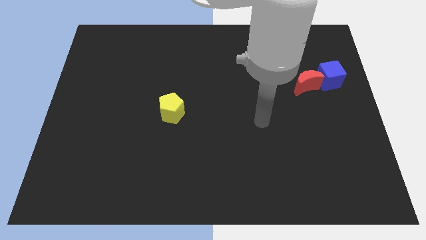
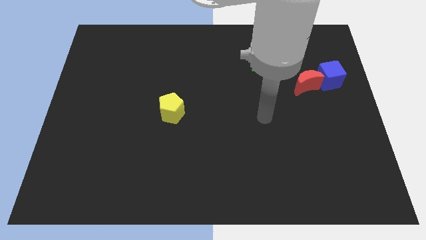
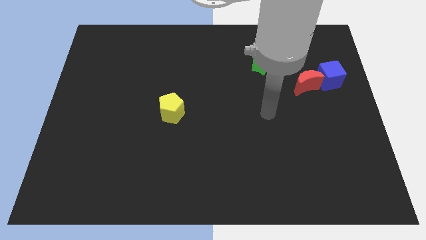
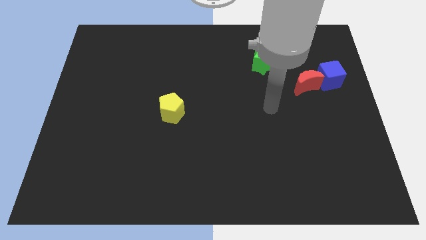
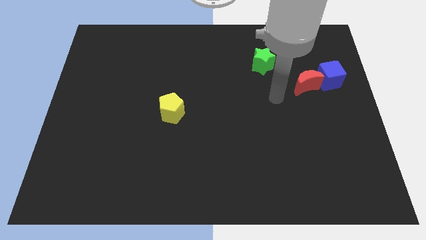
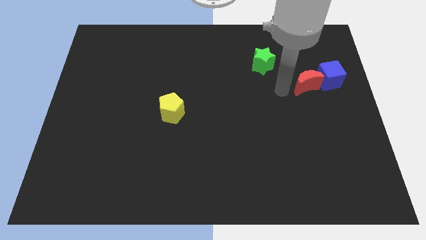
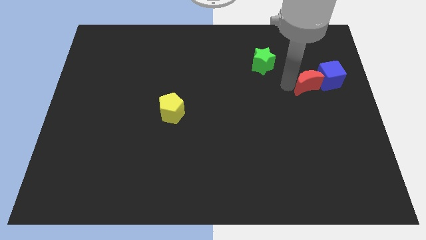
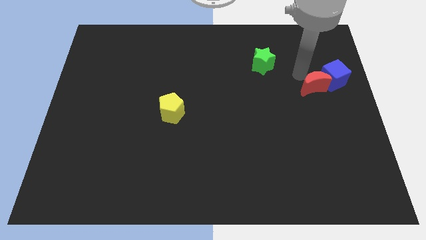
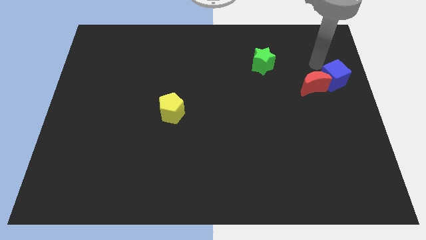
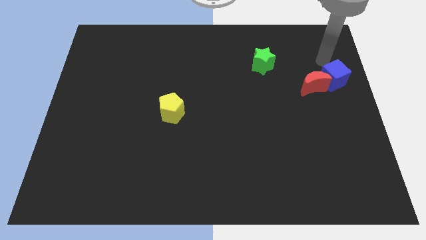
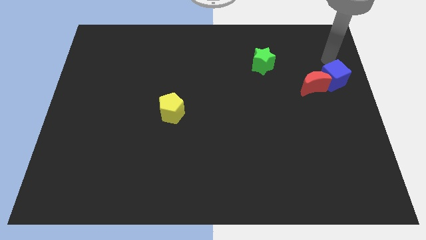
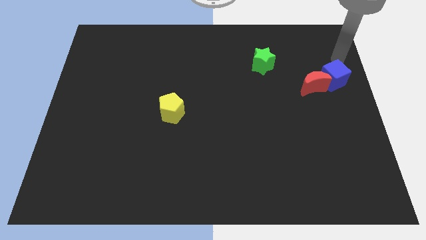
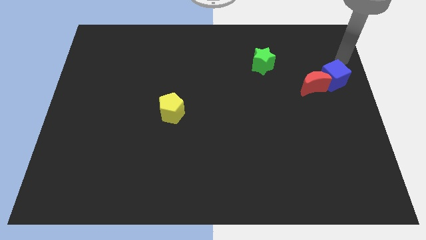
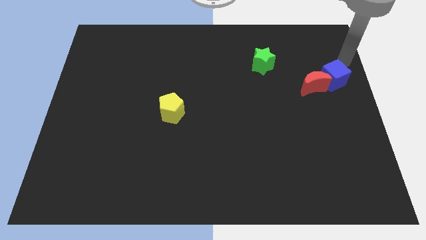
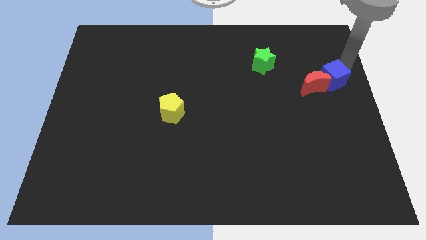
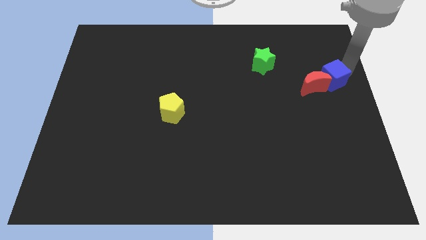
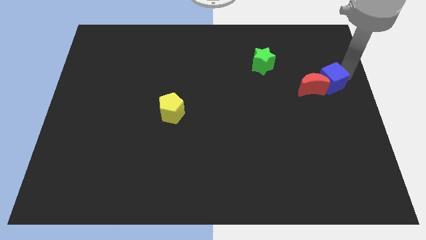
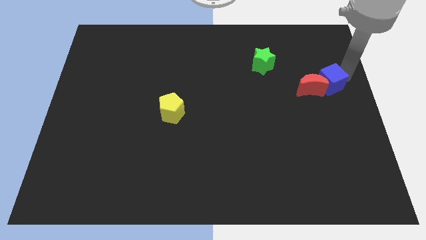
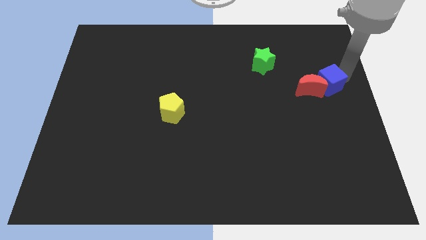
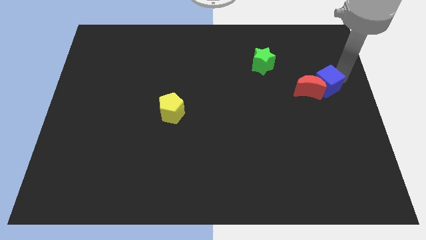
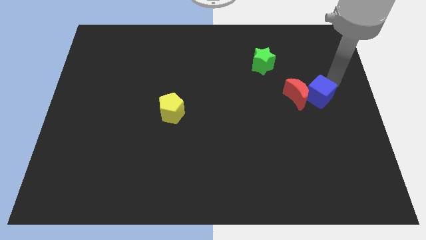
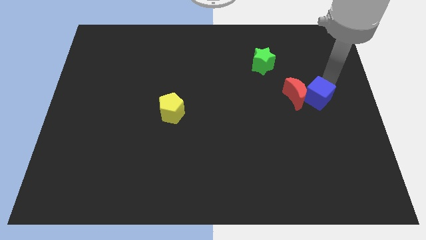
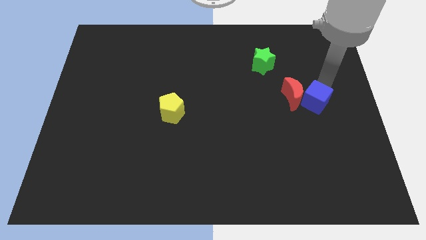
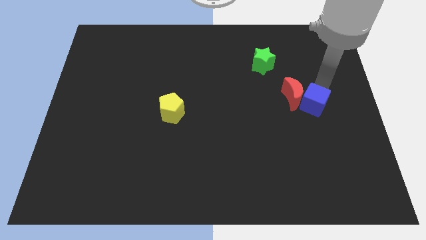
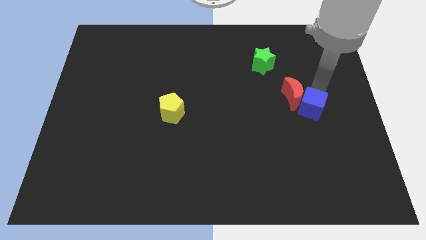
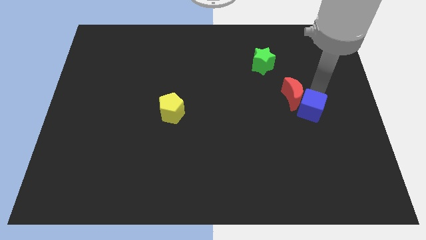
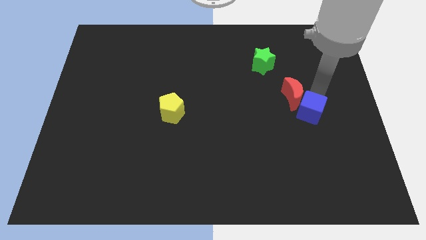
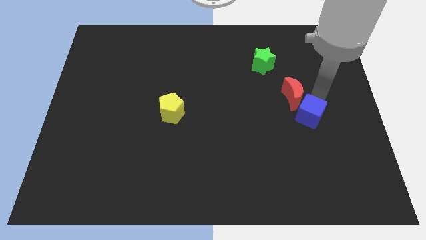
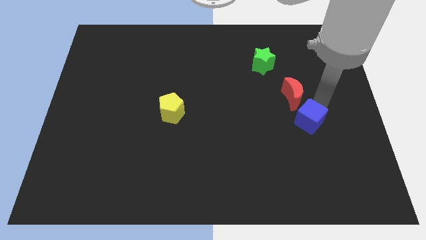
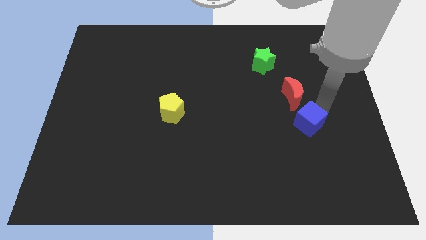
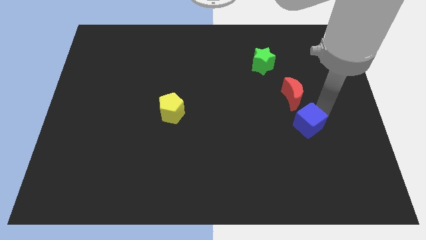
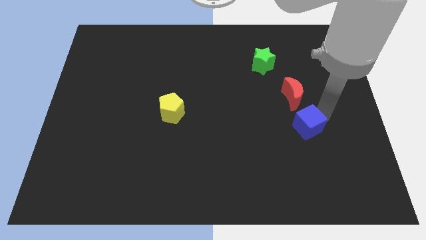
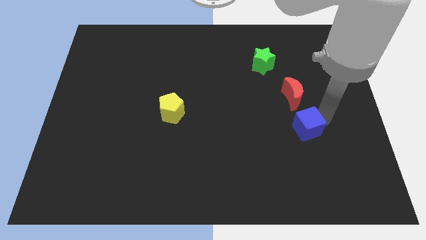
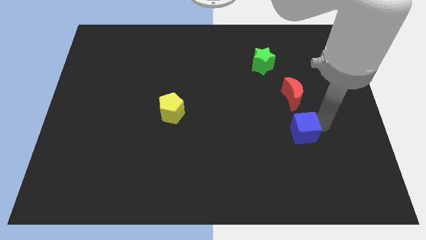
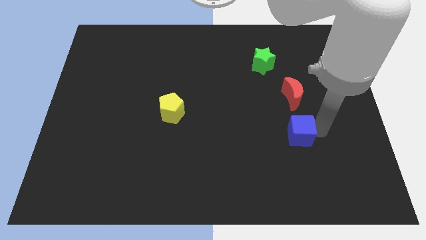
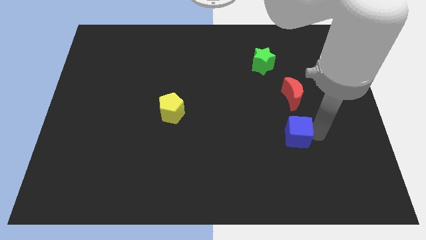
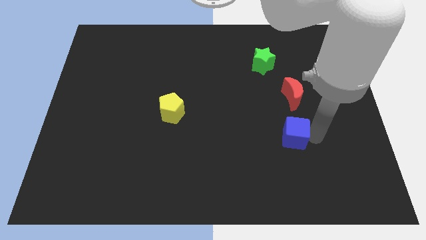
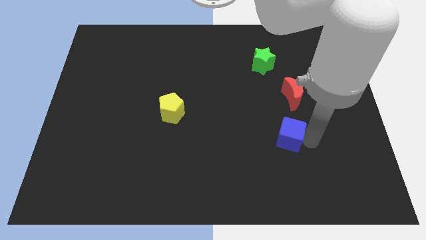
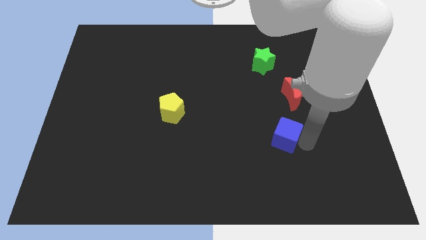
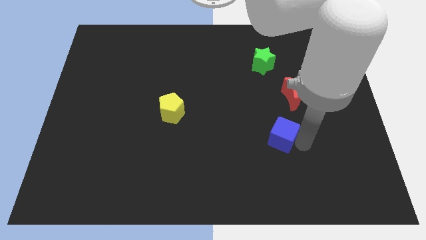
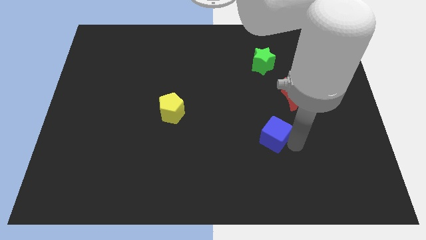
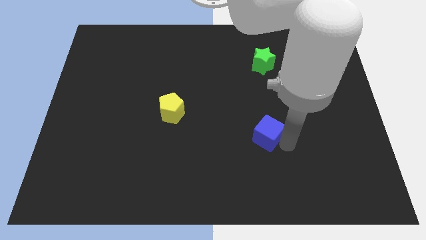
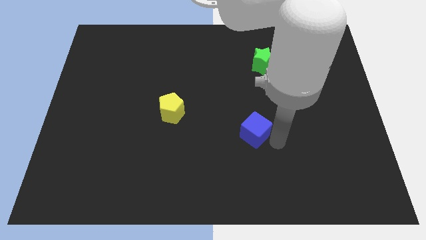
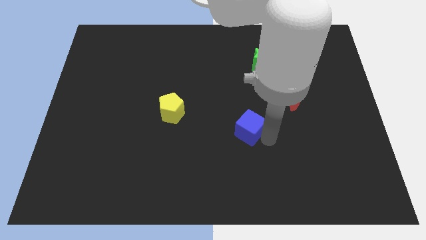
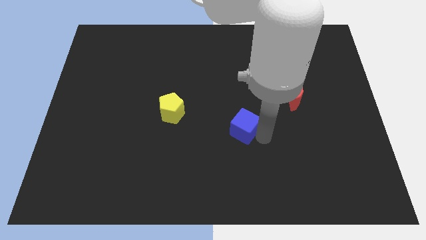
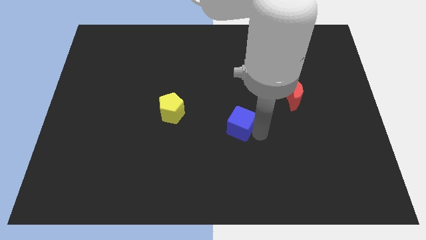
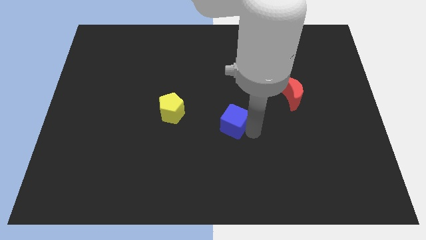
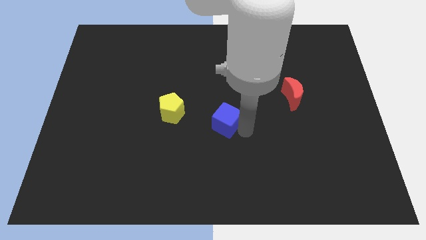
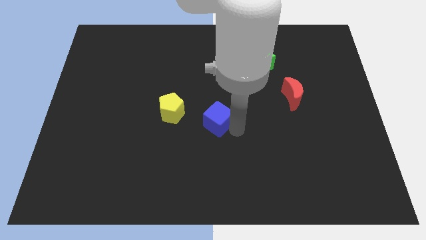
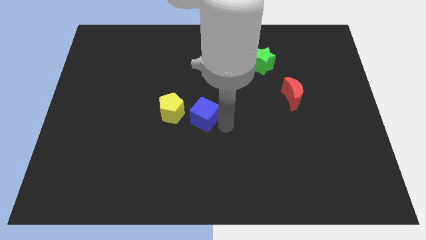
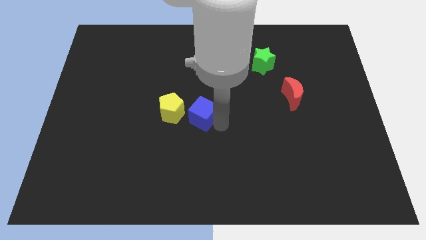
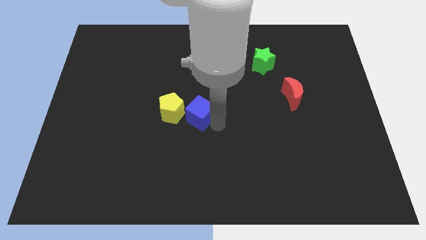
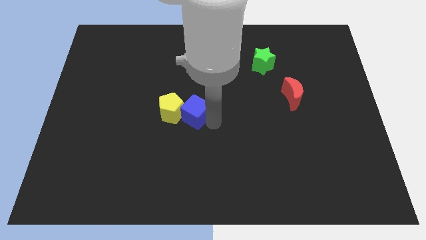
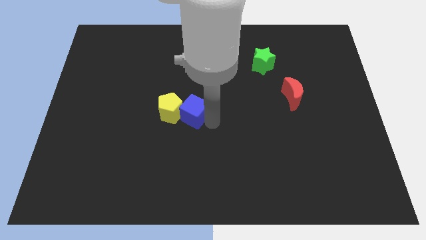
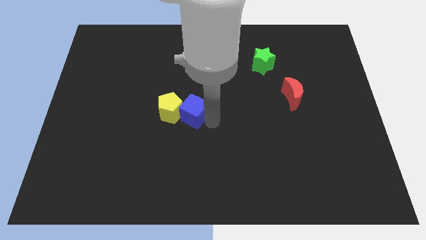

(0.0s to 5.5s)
put the blue cube next to the yellow pentagon

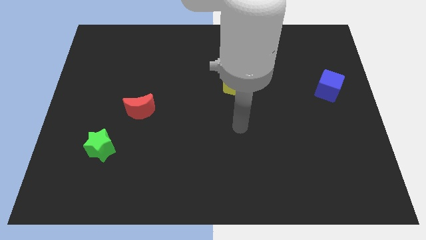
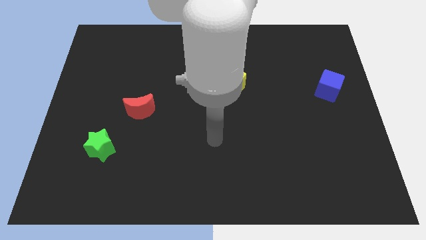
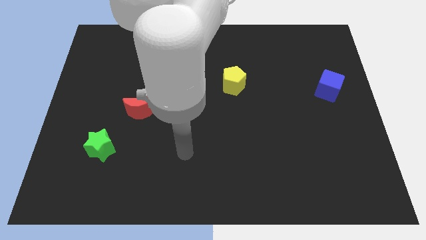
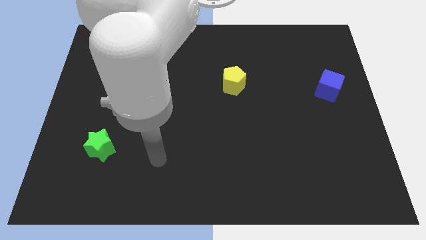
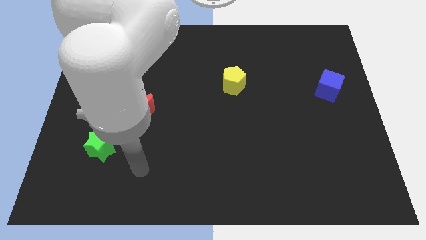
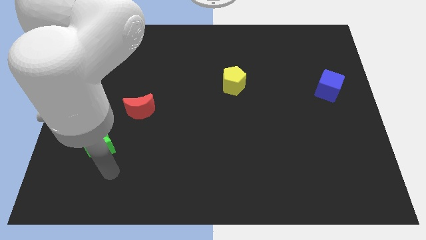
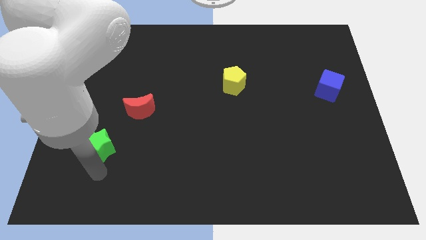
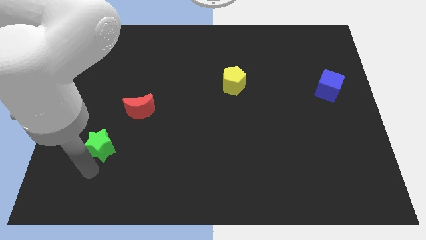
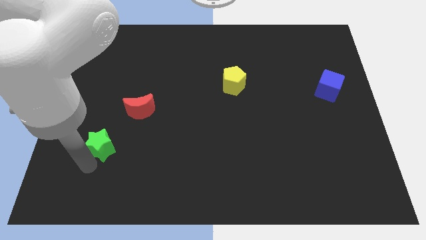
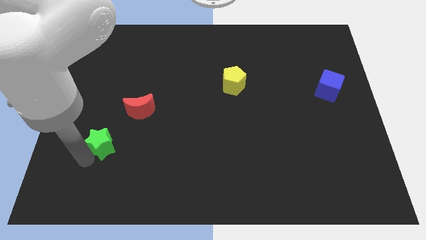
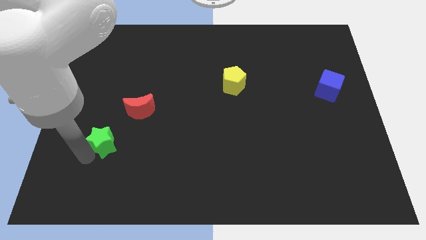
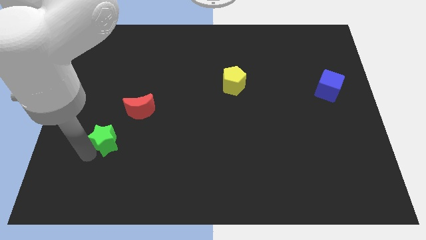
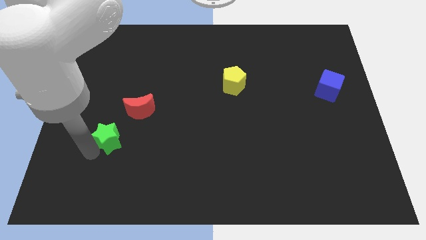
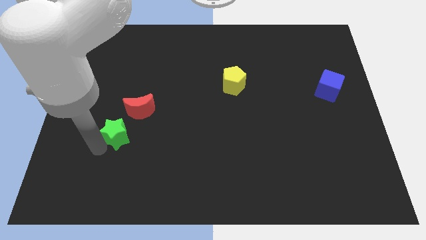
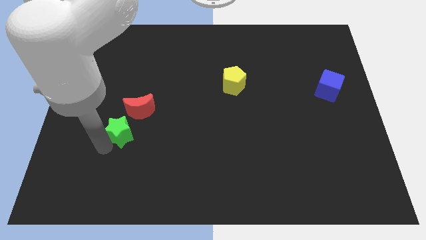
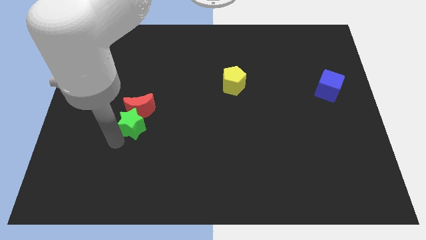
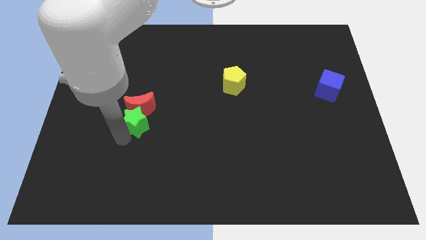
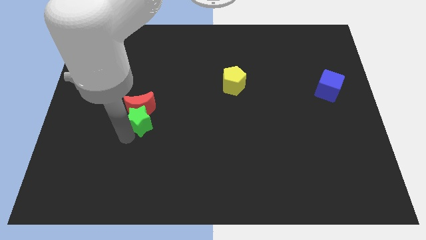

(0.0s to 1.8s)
put the green block towards the red block

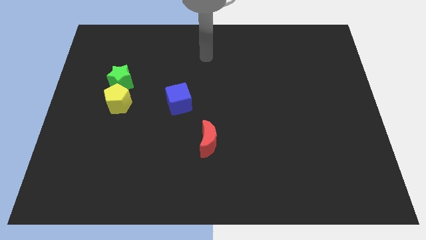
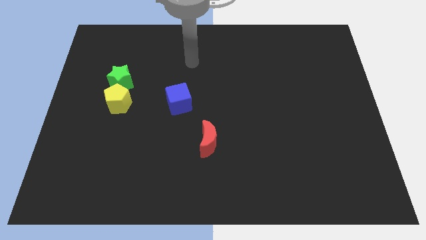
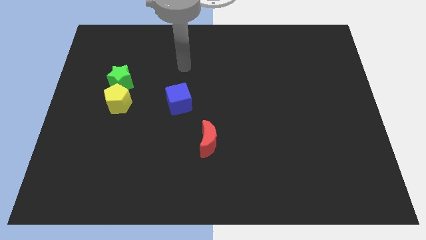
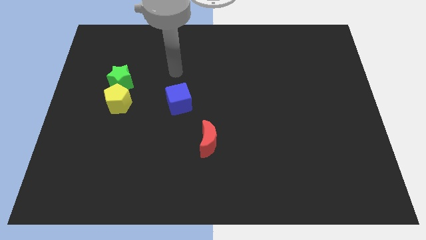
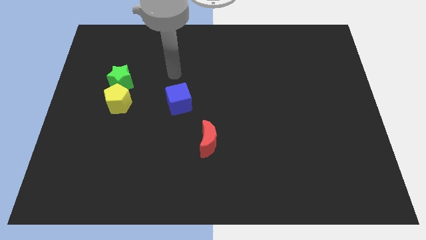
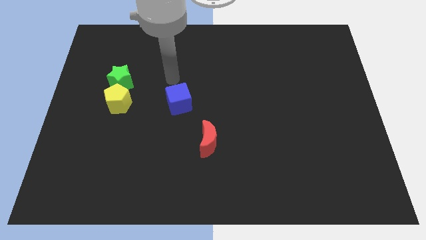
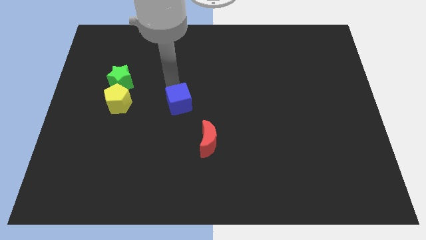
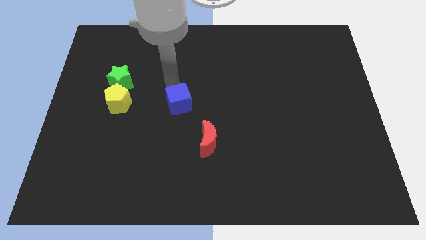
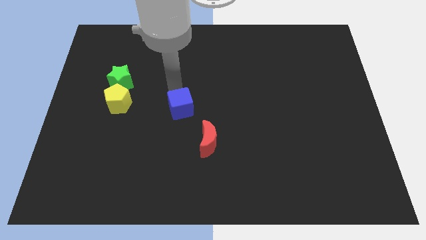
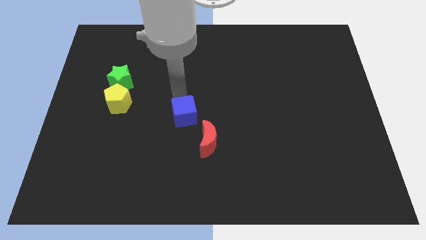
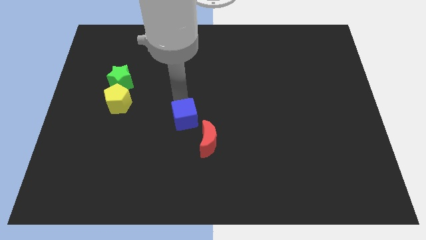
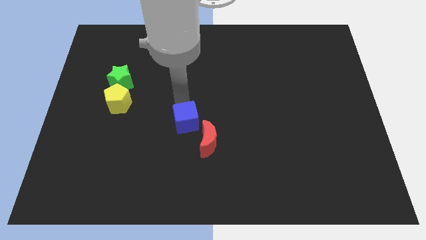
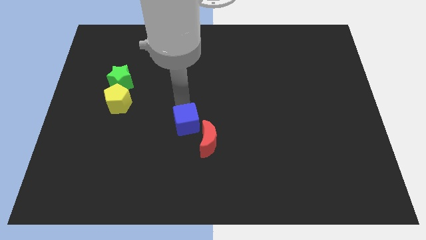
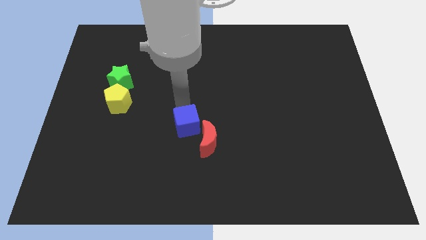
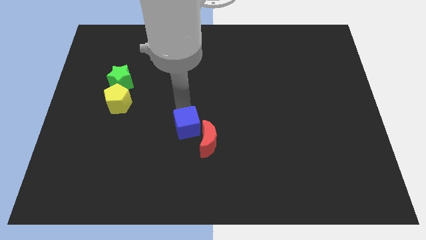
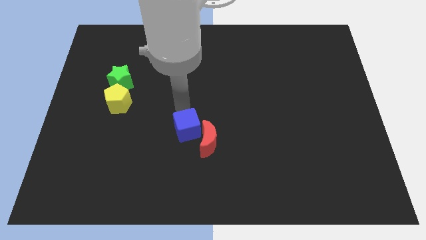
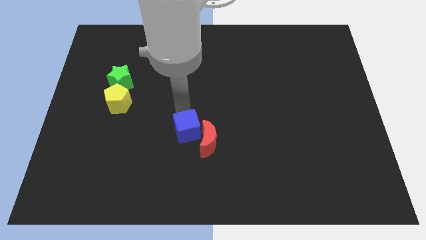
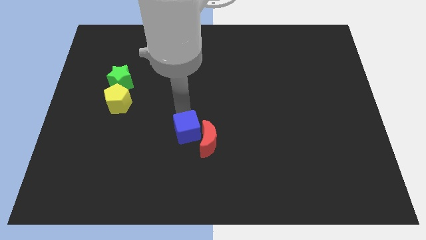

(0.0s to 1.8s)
push the blue cube next to the moon
